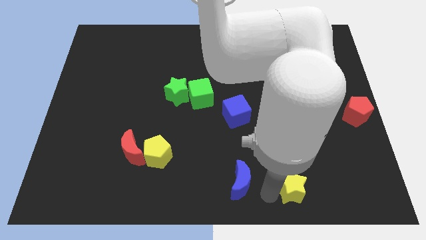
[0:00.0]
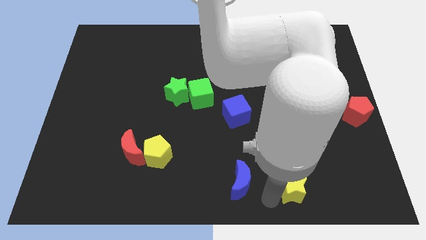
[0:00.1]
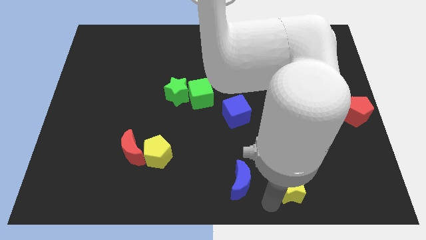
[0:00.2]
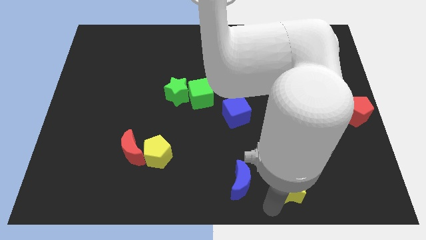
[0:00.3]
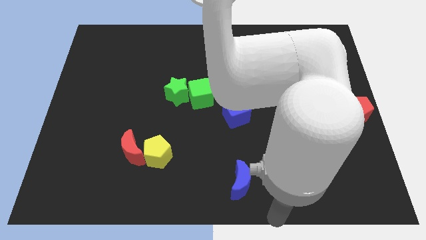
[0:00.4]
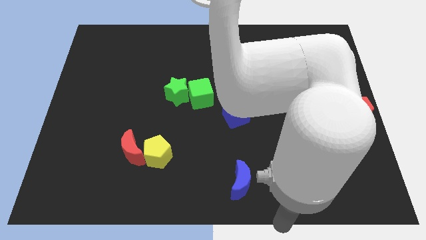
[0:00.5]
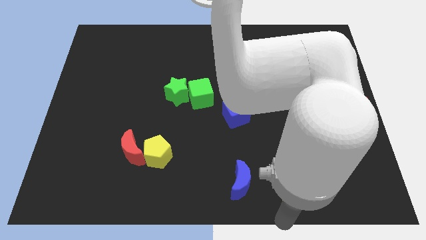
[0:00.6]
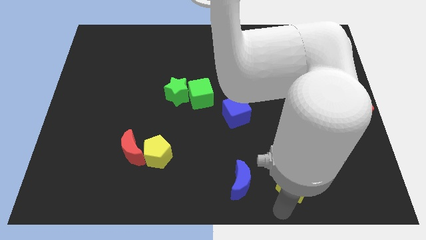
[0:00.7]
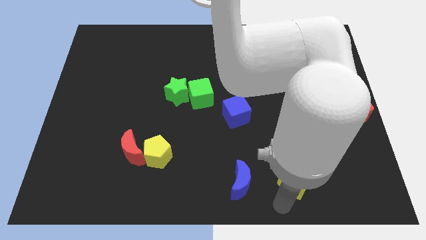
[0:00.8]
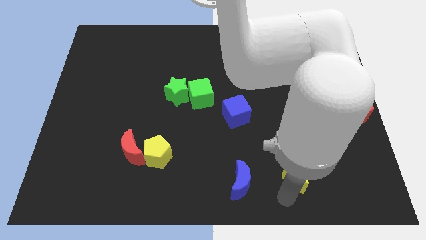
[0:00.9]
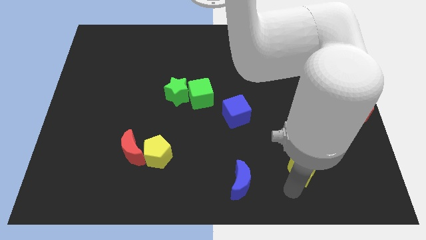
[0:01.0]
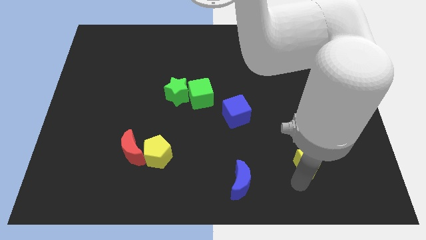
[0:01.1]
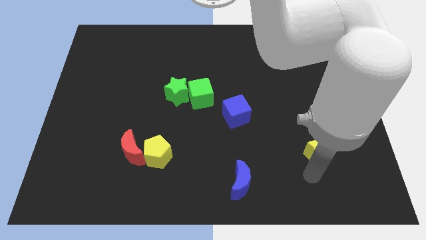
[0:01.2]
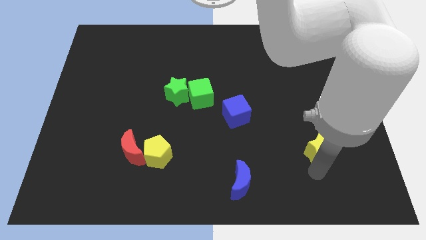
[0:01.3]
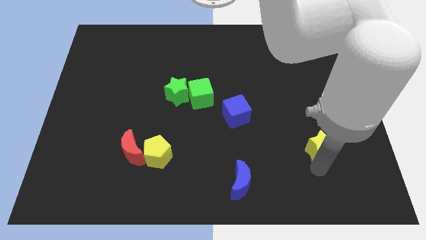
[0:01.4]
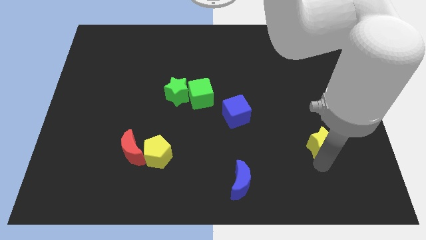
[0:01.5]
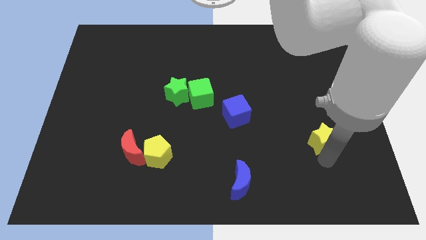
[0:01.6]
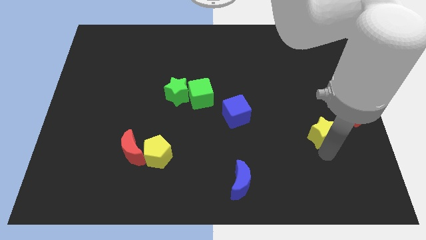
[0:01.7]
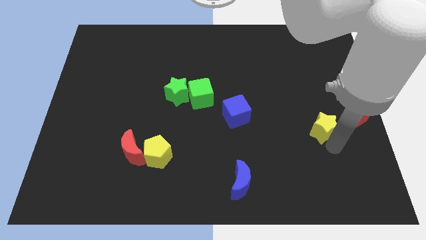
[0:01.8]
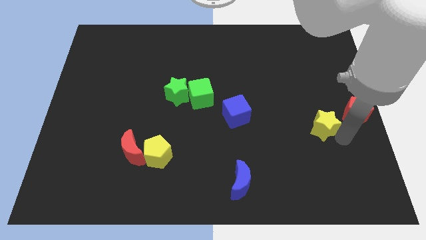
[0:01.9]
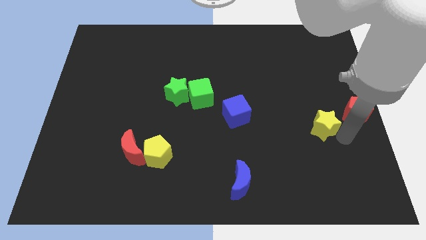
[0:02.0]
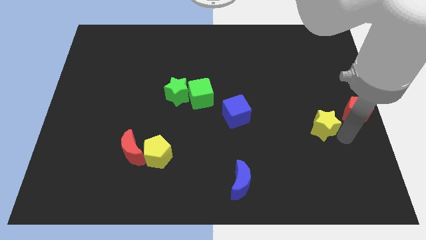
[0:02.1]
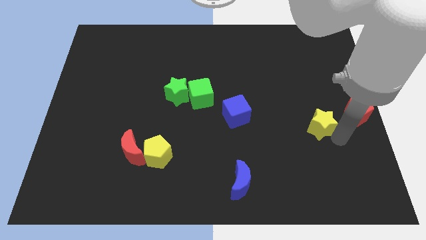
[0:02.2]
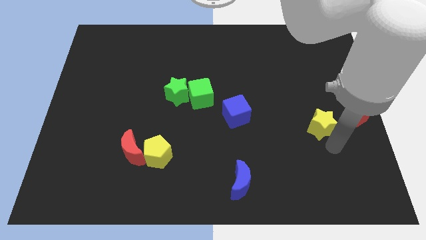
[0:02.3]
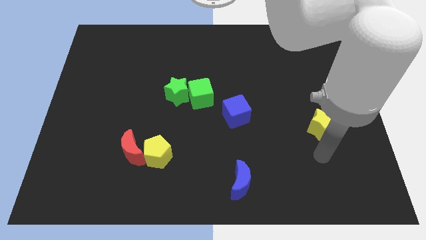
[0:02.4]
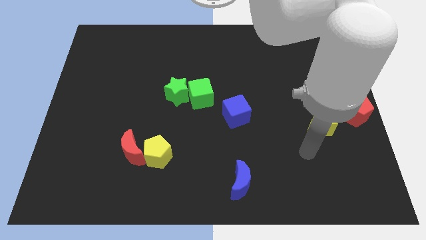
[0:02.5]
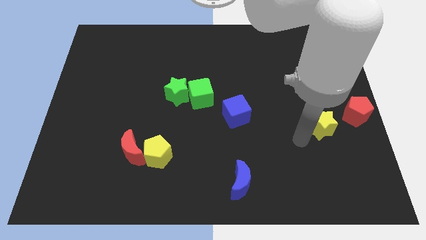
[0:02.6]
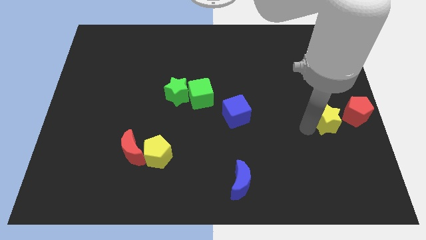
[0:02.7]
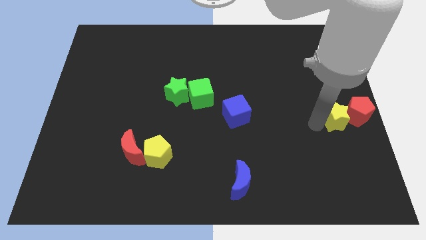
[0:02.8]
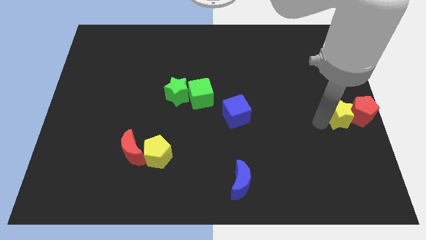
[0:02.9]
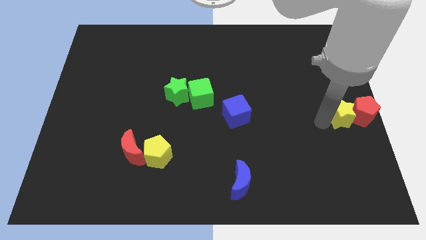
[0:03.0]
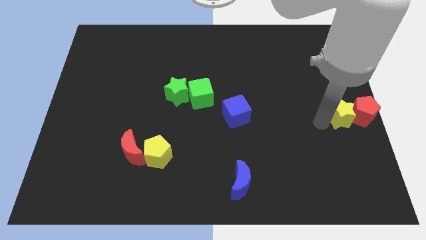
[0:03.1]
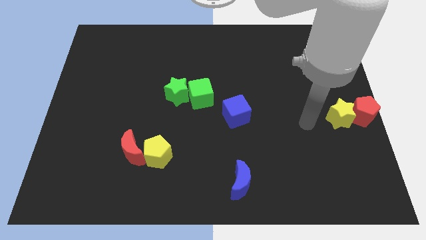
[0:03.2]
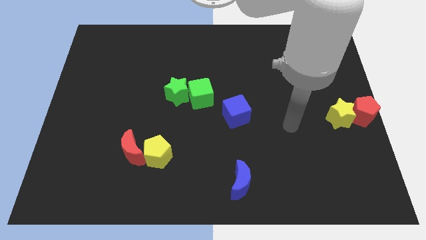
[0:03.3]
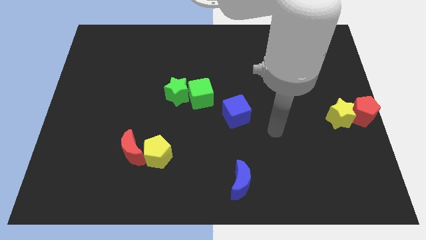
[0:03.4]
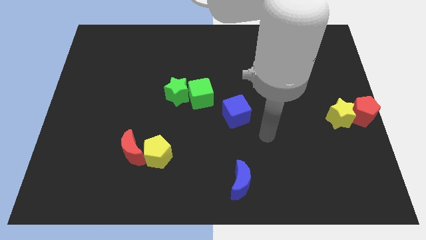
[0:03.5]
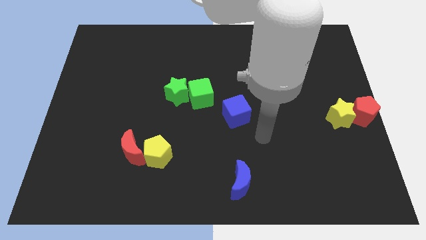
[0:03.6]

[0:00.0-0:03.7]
push the yellow star into the red pentagon

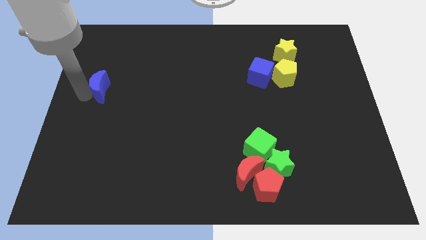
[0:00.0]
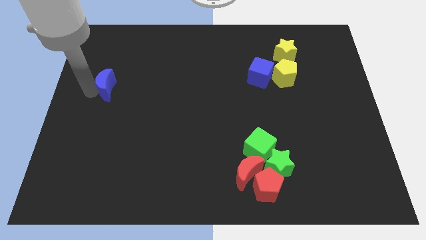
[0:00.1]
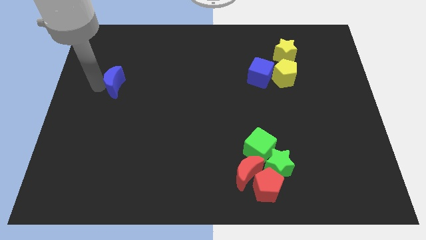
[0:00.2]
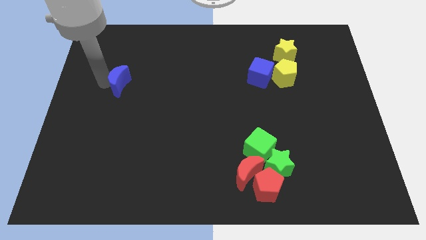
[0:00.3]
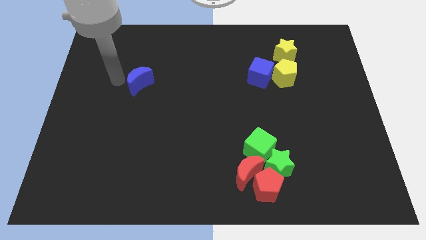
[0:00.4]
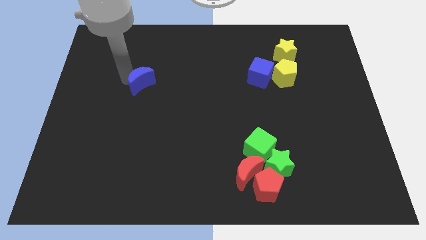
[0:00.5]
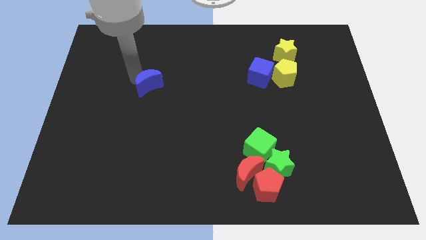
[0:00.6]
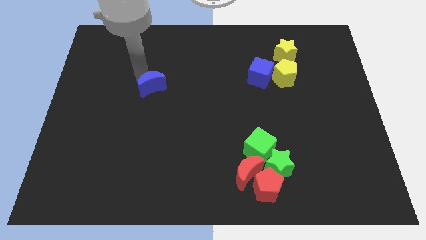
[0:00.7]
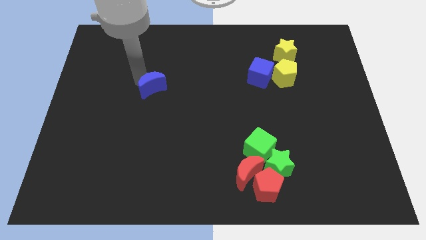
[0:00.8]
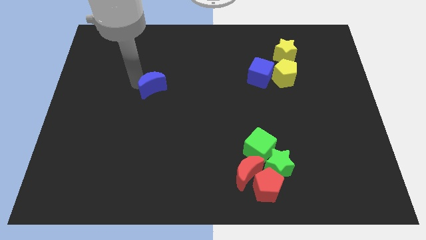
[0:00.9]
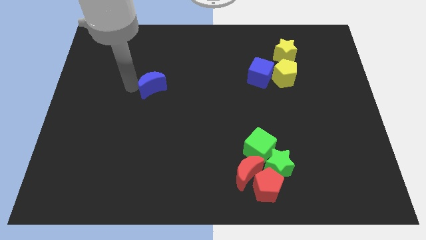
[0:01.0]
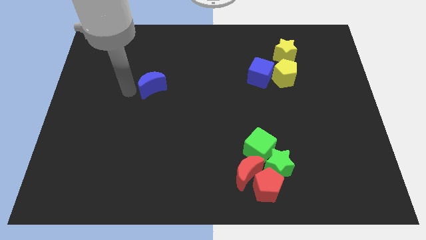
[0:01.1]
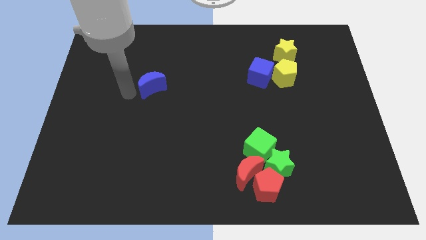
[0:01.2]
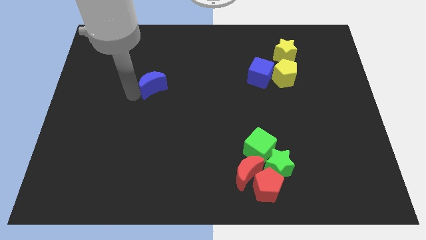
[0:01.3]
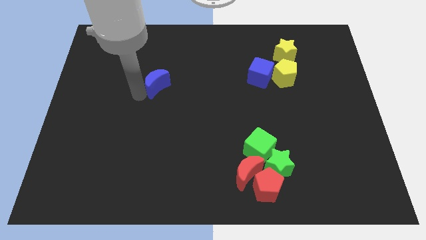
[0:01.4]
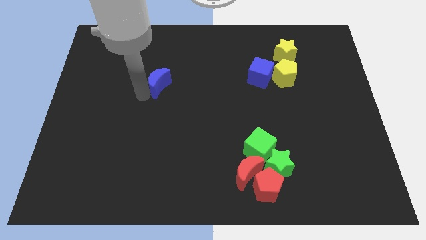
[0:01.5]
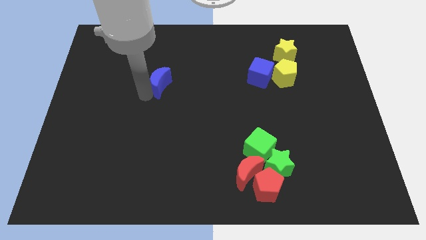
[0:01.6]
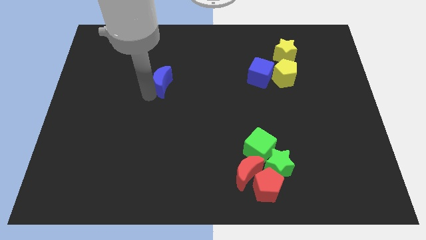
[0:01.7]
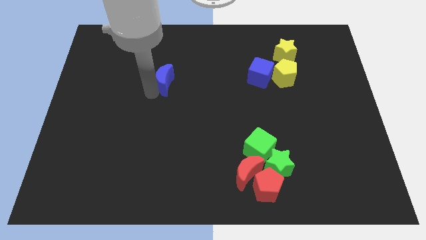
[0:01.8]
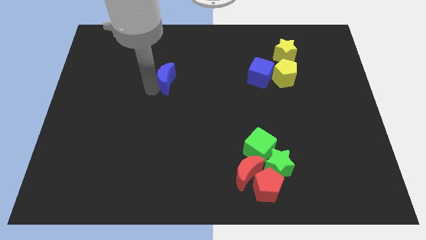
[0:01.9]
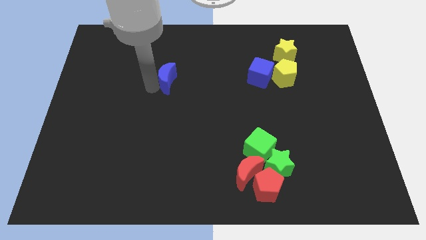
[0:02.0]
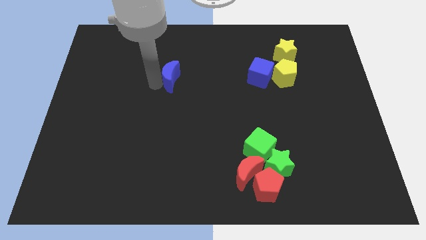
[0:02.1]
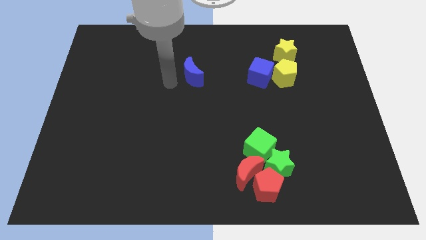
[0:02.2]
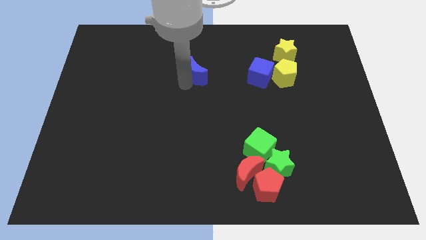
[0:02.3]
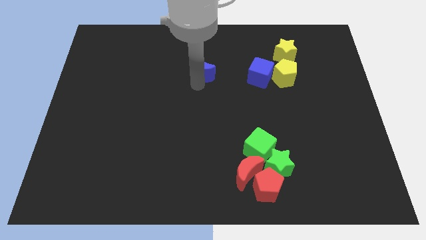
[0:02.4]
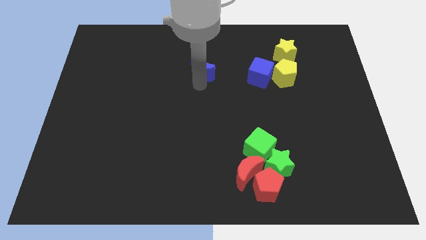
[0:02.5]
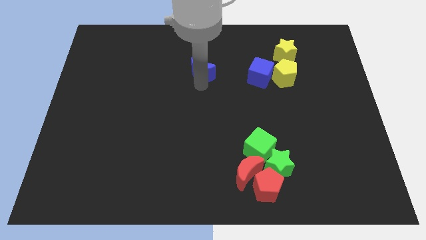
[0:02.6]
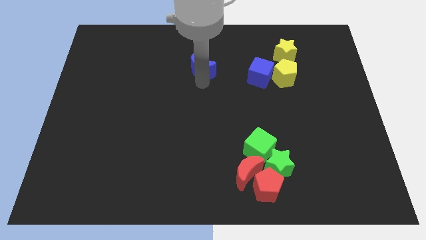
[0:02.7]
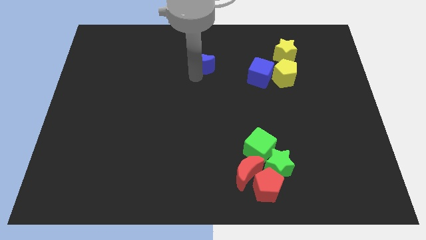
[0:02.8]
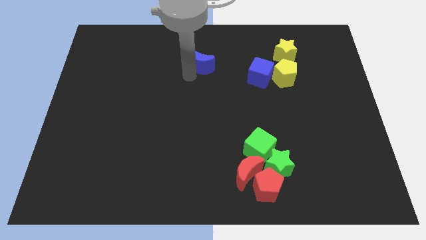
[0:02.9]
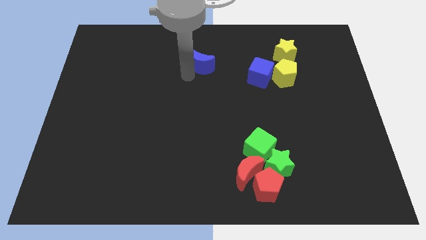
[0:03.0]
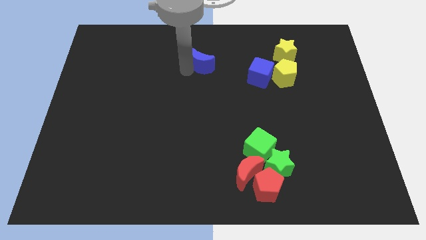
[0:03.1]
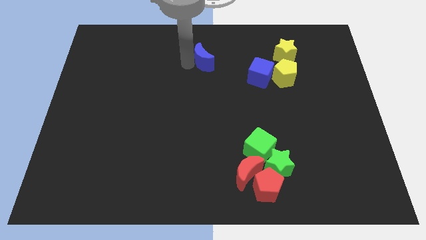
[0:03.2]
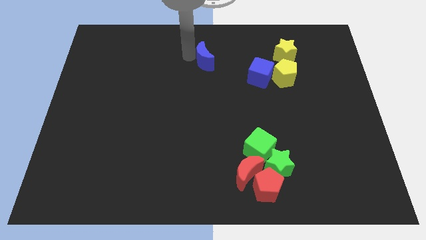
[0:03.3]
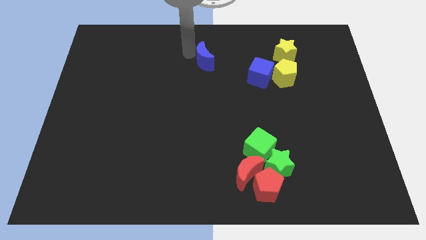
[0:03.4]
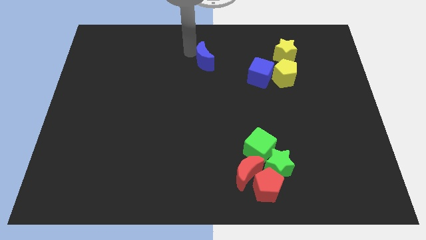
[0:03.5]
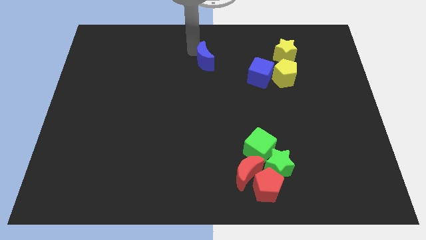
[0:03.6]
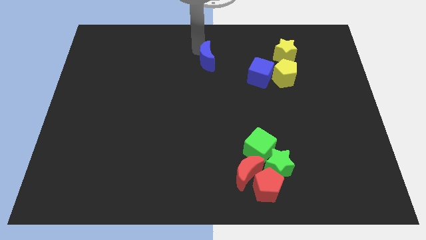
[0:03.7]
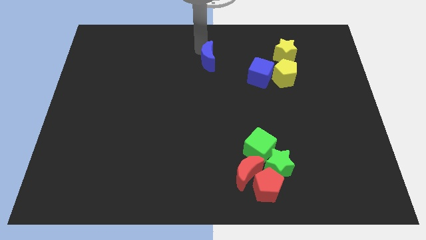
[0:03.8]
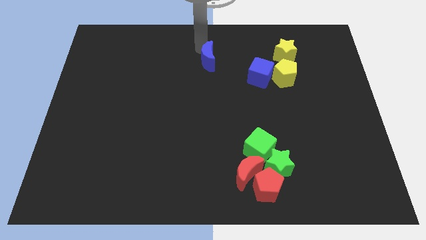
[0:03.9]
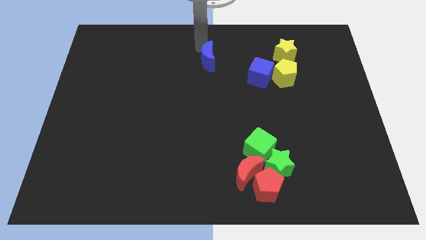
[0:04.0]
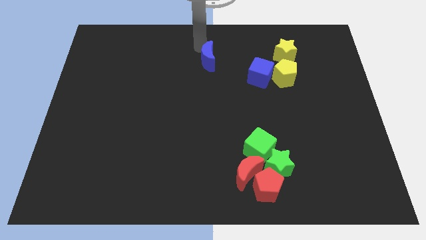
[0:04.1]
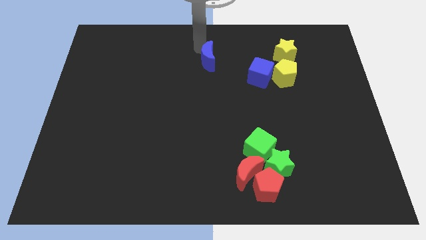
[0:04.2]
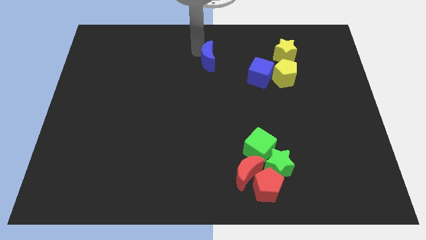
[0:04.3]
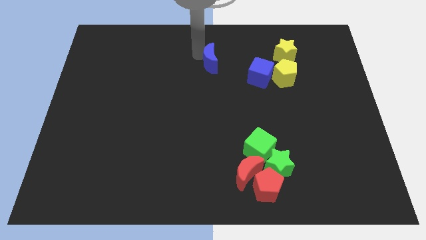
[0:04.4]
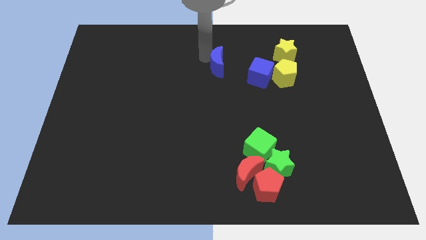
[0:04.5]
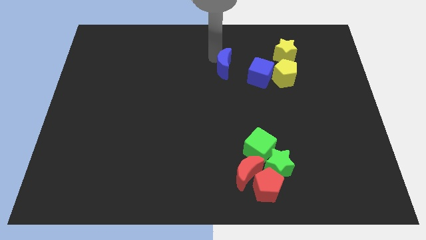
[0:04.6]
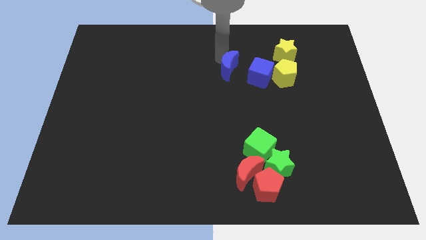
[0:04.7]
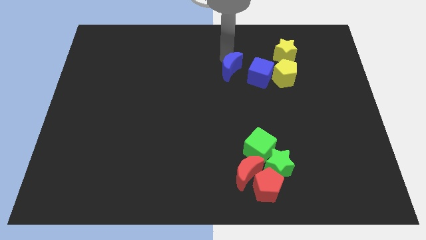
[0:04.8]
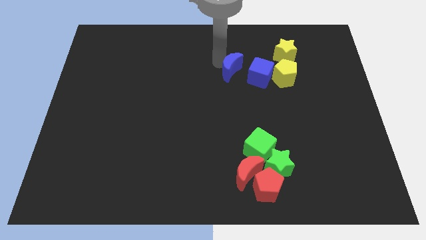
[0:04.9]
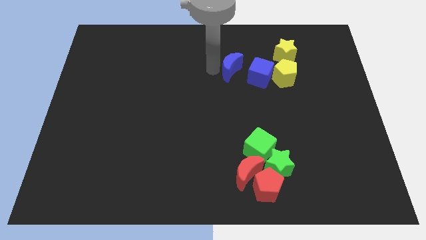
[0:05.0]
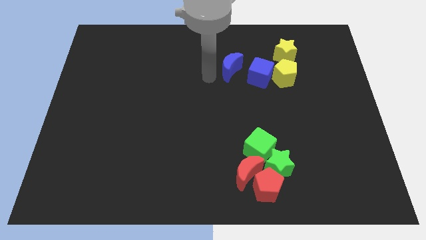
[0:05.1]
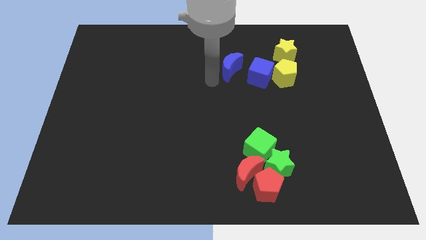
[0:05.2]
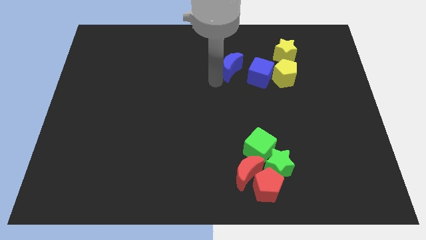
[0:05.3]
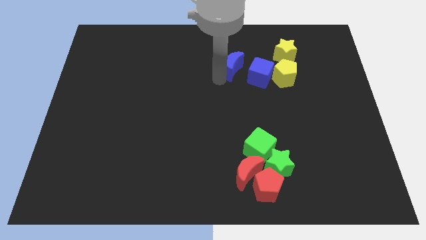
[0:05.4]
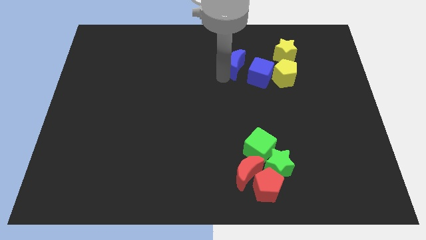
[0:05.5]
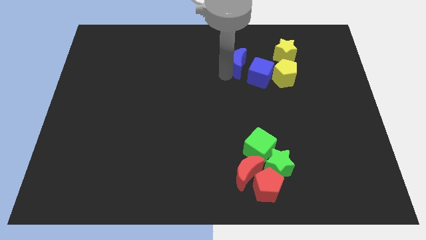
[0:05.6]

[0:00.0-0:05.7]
move the blue crescent to the left of the blue cube
